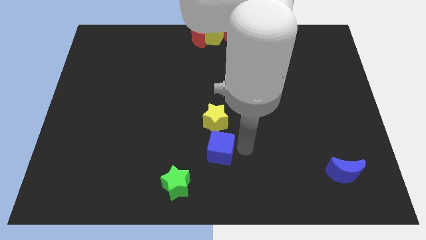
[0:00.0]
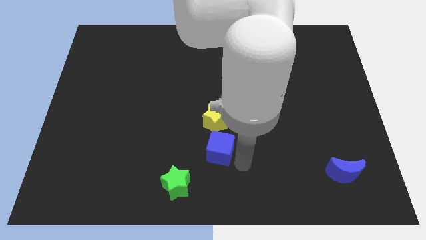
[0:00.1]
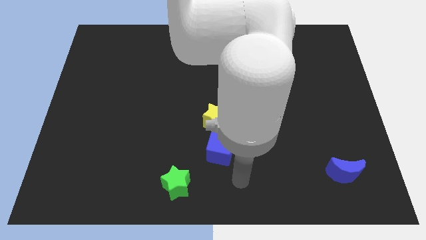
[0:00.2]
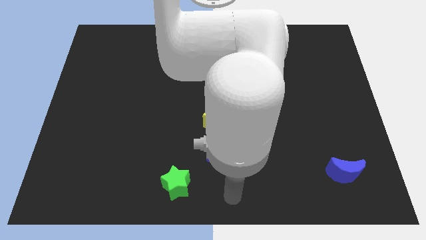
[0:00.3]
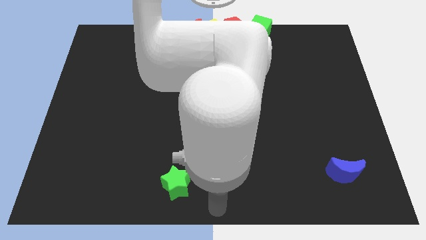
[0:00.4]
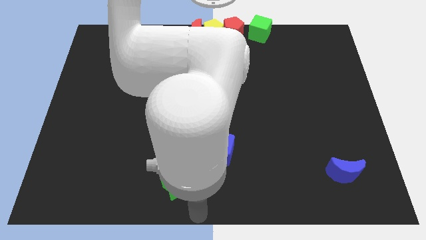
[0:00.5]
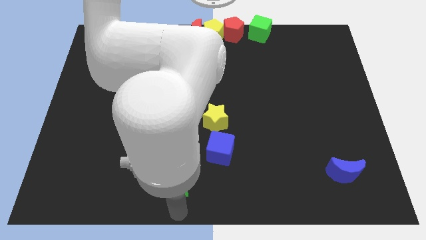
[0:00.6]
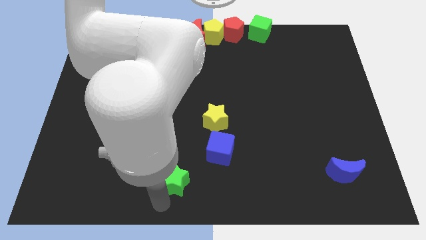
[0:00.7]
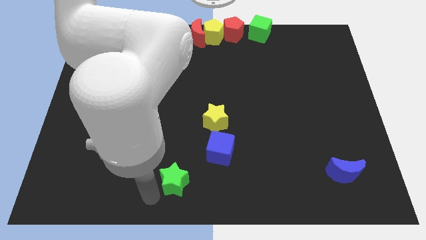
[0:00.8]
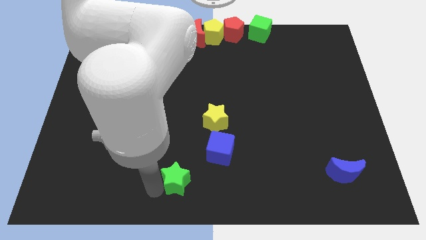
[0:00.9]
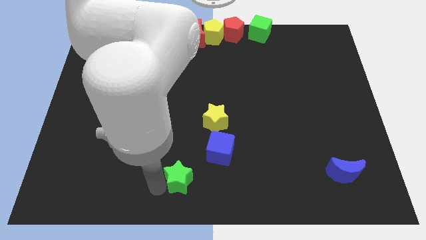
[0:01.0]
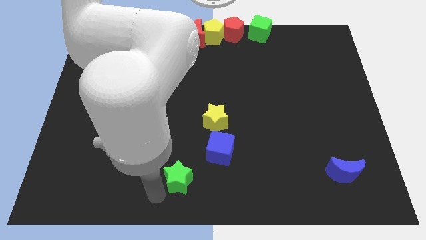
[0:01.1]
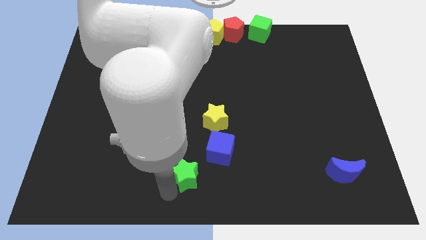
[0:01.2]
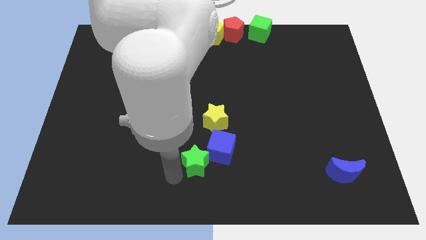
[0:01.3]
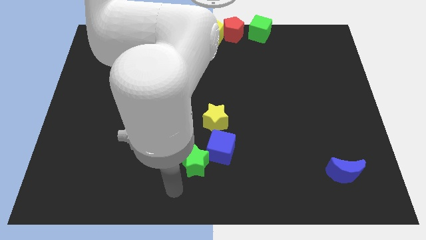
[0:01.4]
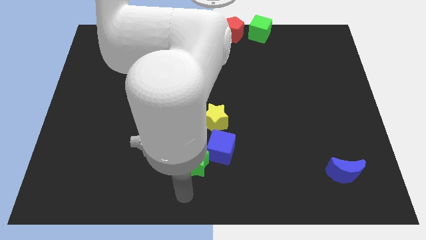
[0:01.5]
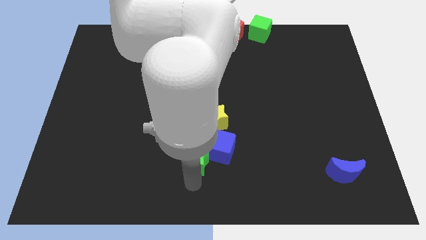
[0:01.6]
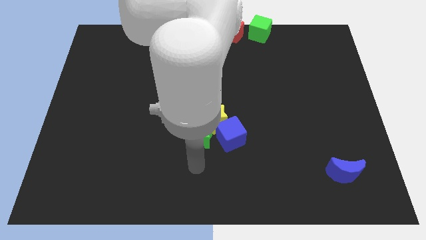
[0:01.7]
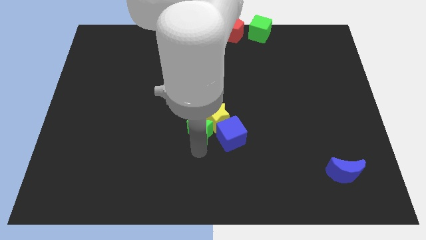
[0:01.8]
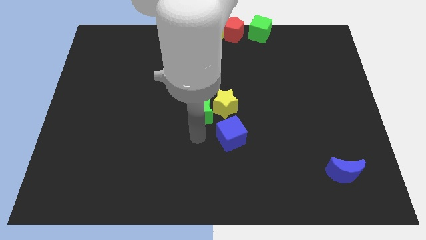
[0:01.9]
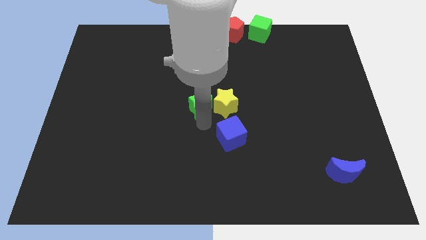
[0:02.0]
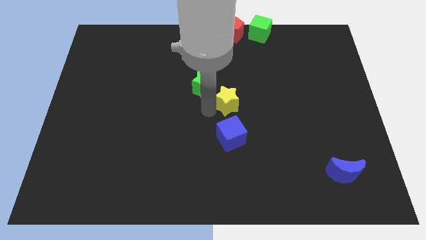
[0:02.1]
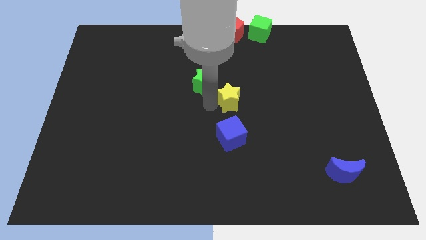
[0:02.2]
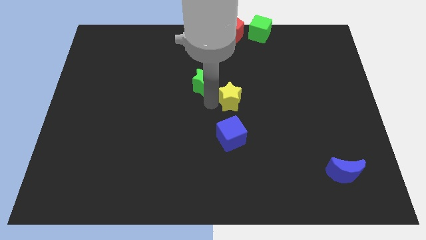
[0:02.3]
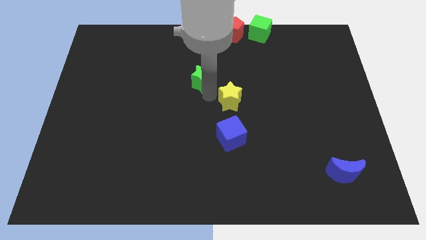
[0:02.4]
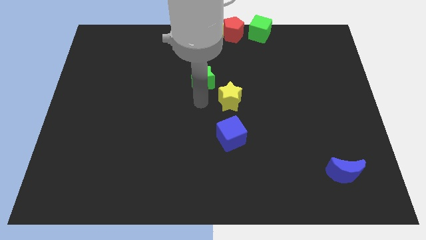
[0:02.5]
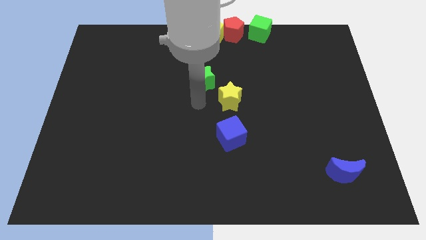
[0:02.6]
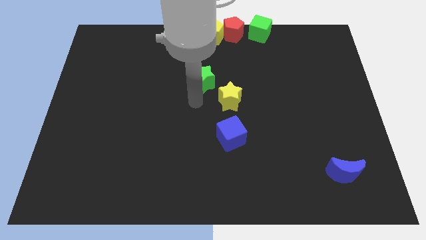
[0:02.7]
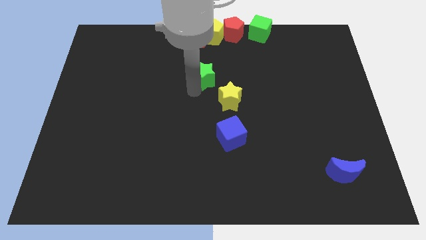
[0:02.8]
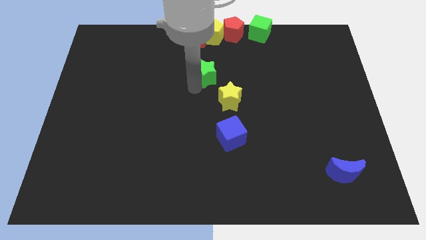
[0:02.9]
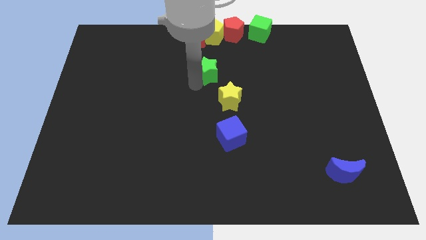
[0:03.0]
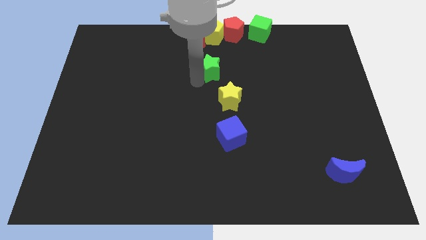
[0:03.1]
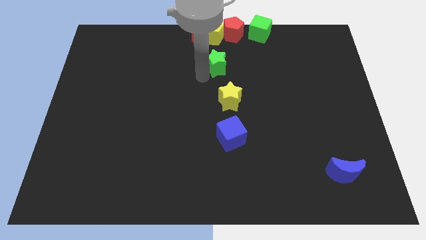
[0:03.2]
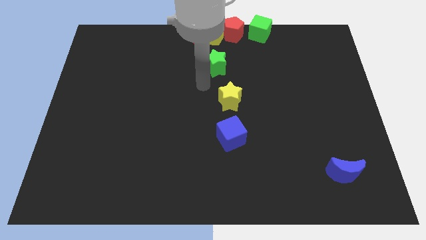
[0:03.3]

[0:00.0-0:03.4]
push the green star vertically below the yellow pentagon

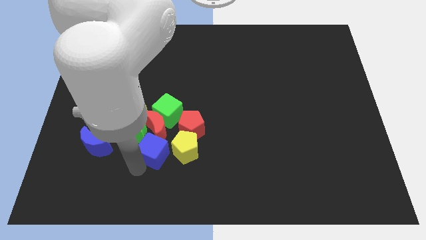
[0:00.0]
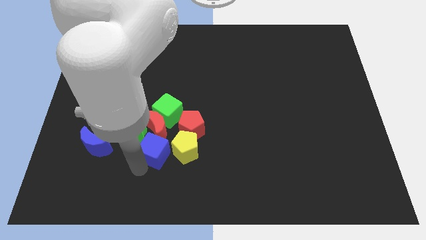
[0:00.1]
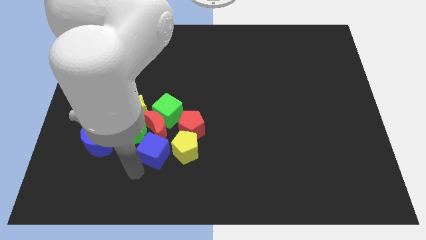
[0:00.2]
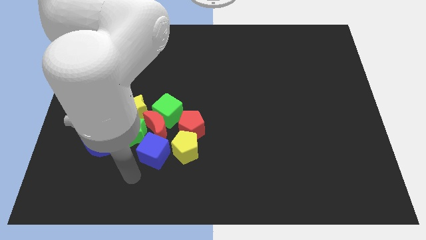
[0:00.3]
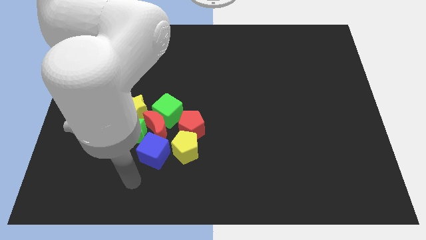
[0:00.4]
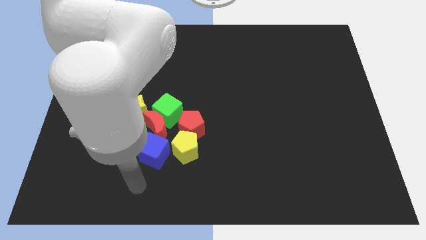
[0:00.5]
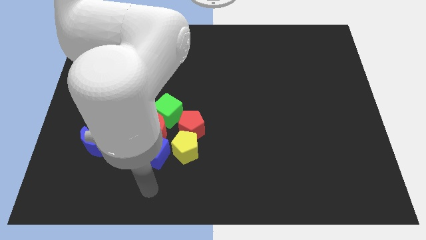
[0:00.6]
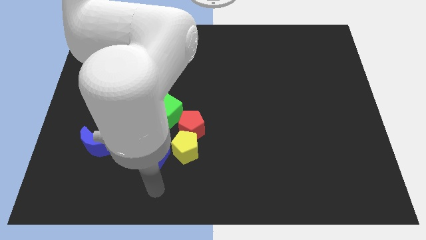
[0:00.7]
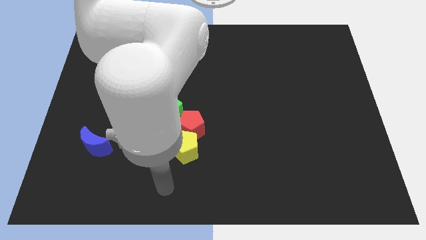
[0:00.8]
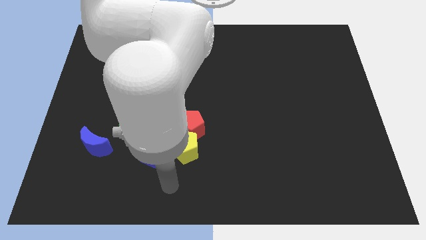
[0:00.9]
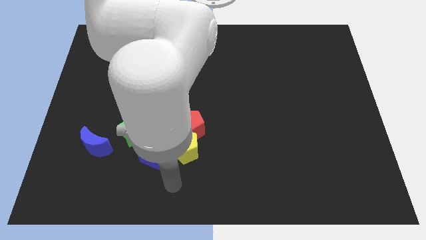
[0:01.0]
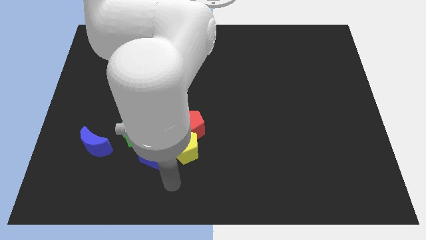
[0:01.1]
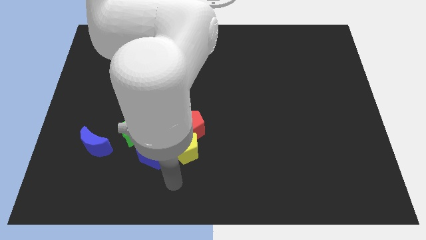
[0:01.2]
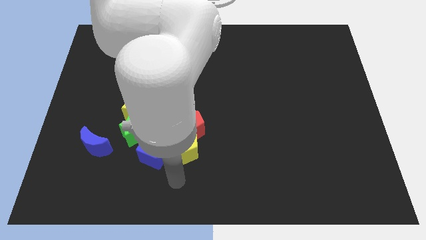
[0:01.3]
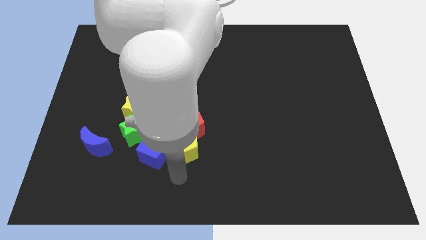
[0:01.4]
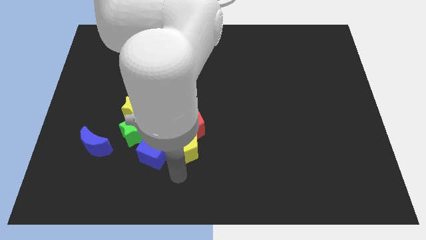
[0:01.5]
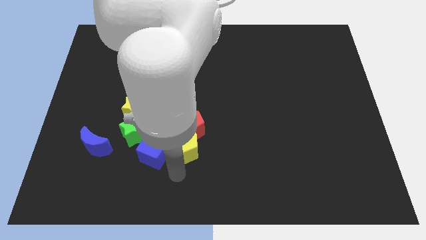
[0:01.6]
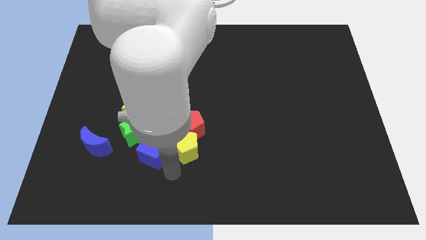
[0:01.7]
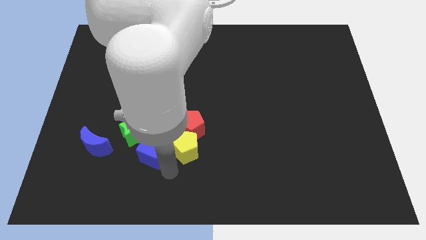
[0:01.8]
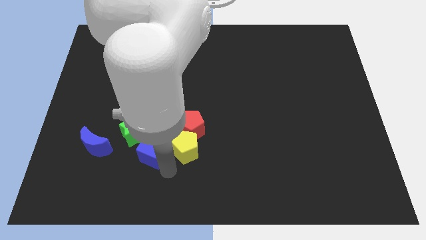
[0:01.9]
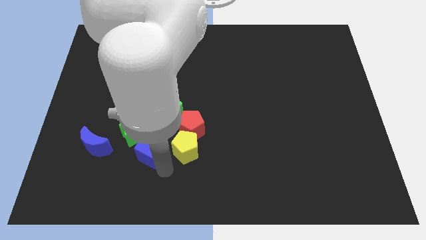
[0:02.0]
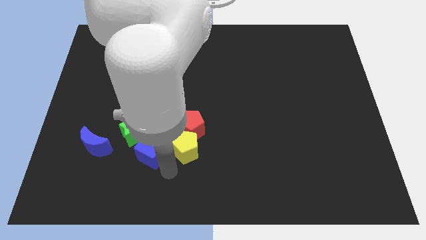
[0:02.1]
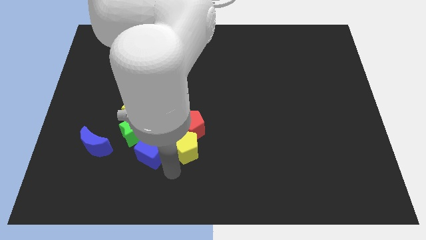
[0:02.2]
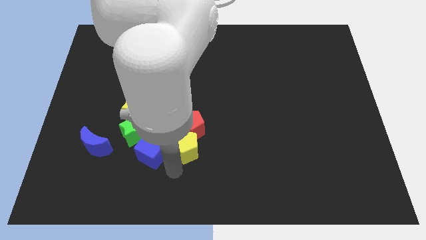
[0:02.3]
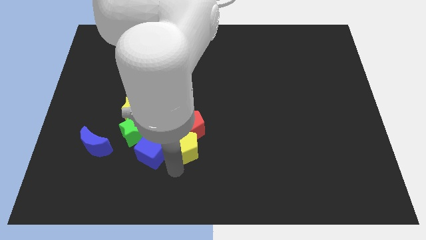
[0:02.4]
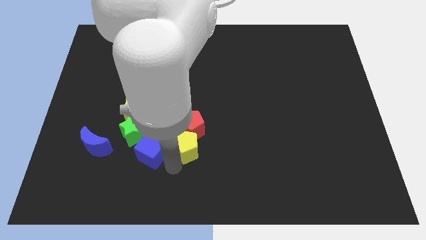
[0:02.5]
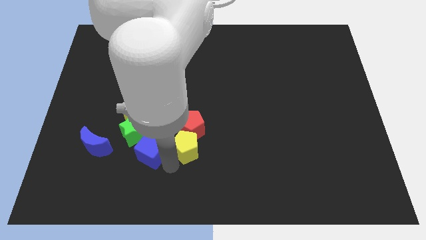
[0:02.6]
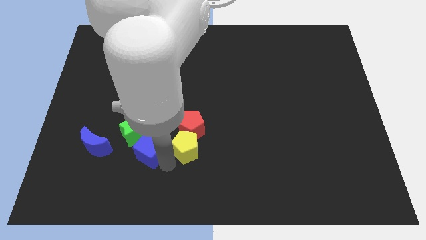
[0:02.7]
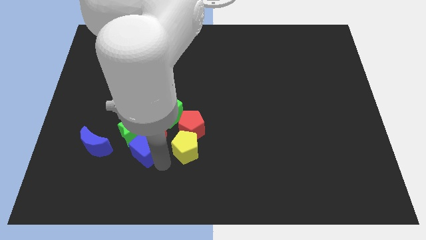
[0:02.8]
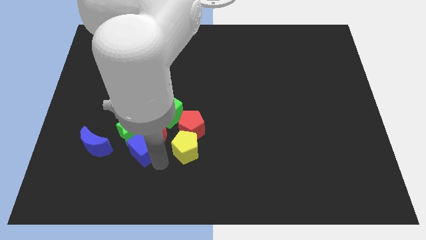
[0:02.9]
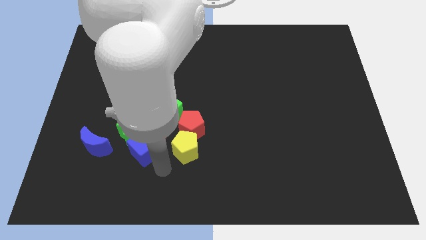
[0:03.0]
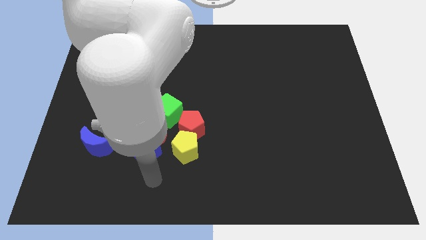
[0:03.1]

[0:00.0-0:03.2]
push the blue cube into the green star

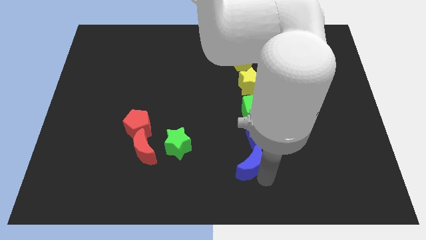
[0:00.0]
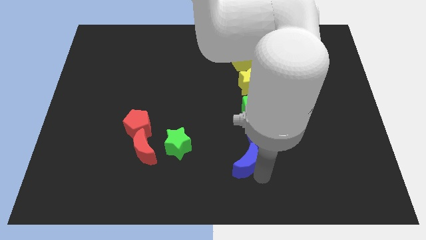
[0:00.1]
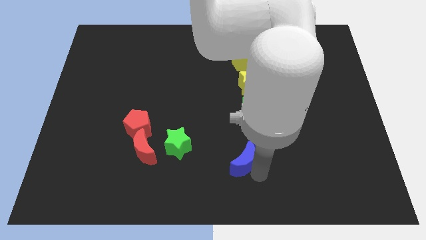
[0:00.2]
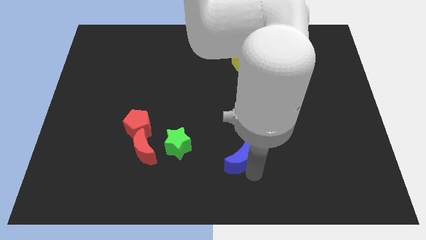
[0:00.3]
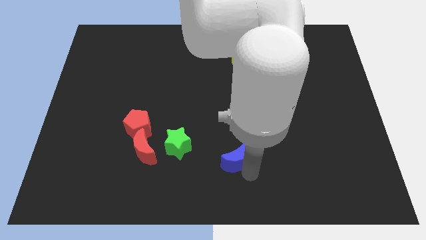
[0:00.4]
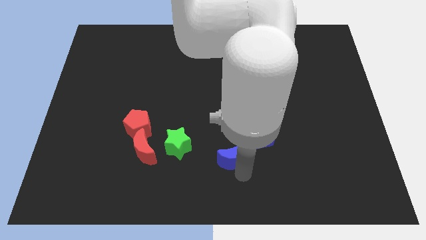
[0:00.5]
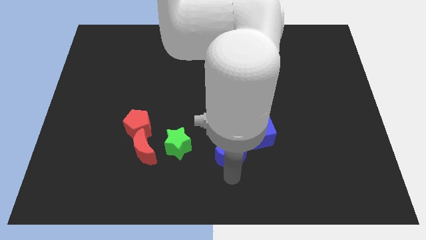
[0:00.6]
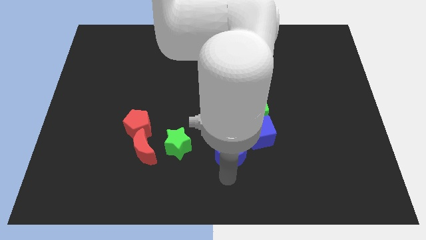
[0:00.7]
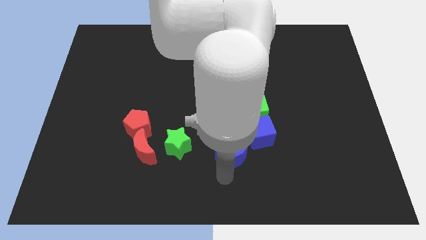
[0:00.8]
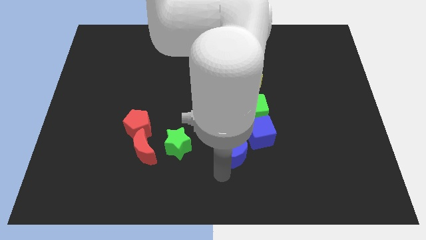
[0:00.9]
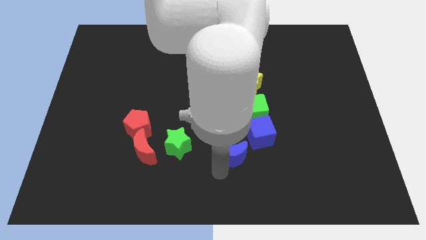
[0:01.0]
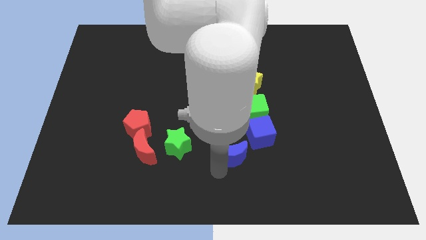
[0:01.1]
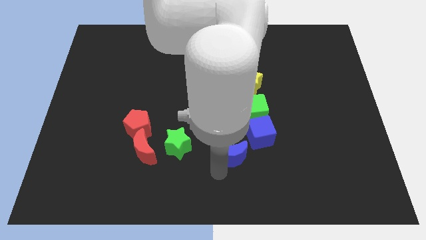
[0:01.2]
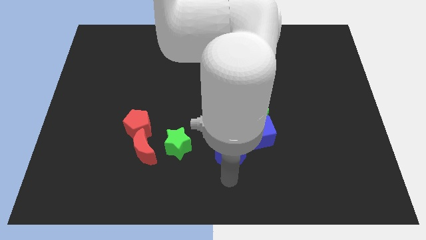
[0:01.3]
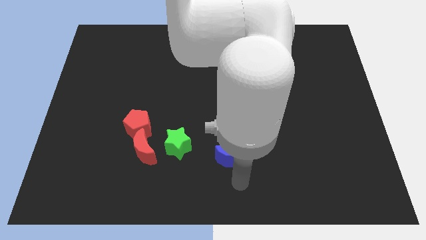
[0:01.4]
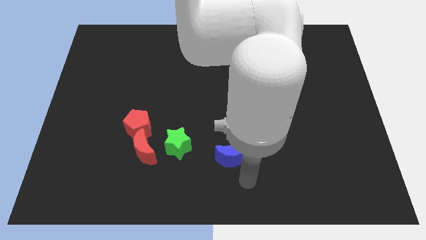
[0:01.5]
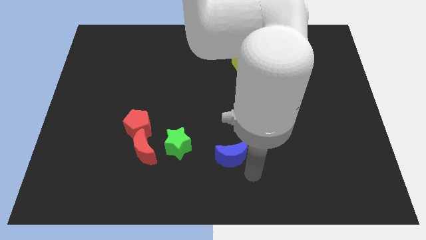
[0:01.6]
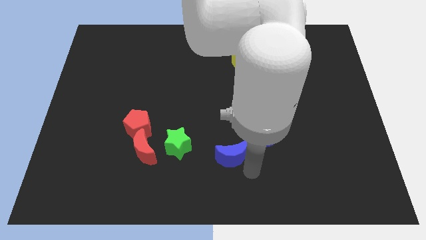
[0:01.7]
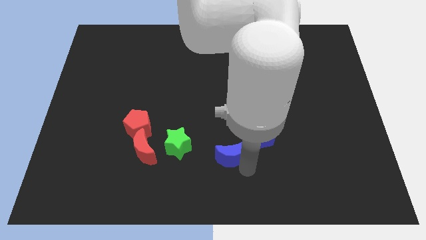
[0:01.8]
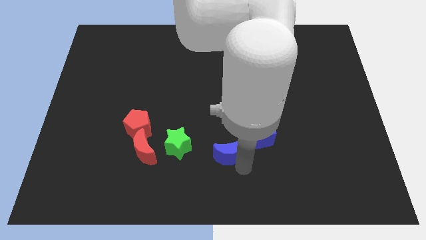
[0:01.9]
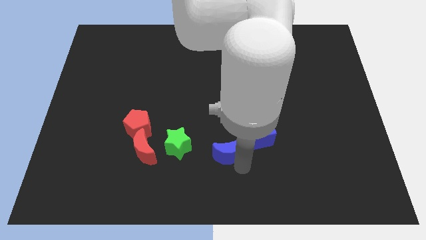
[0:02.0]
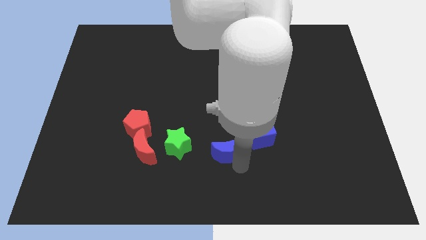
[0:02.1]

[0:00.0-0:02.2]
place blue crescent parallel to green star

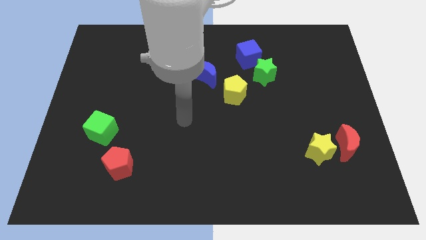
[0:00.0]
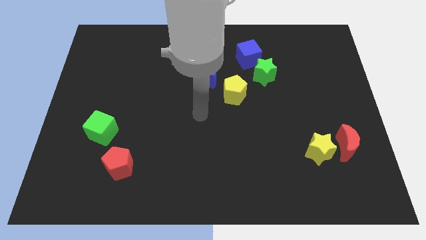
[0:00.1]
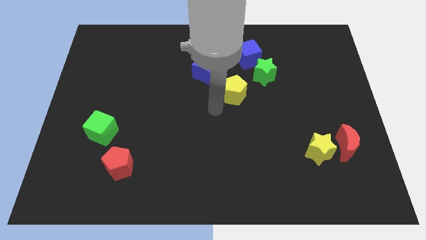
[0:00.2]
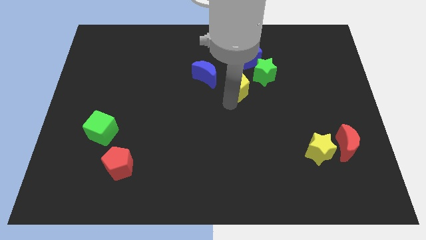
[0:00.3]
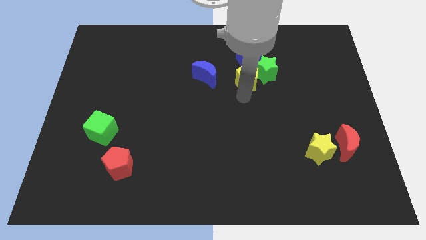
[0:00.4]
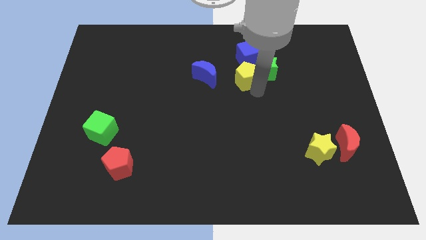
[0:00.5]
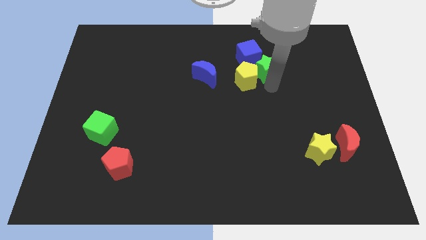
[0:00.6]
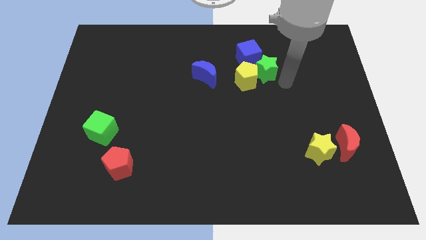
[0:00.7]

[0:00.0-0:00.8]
slightly move yellow pentagon towards top side
